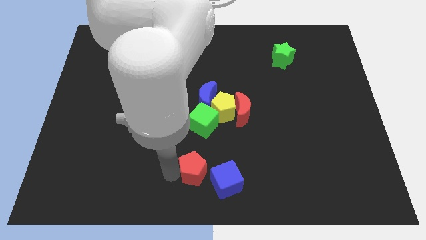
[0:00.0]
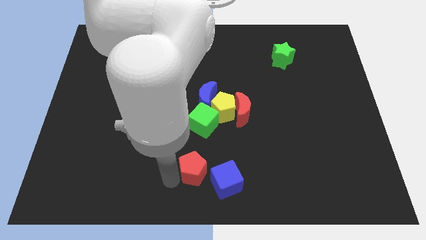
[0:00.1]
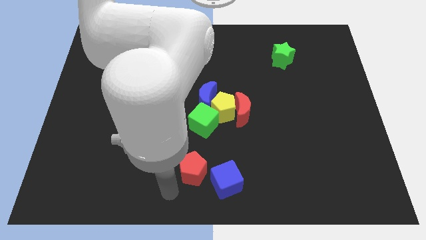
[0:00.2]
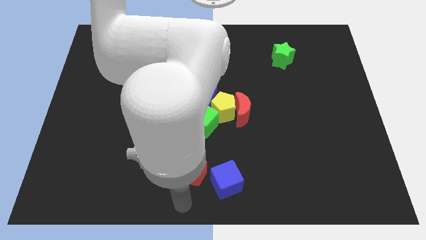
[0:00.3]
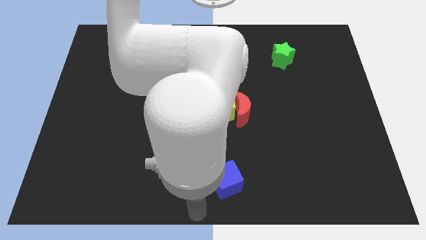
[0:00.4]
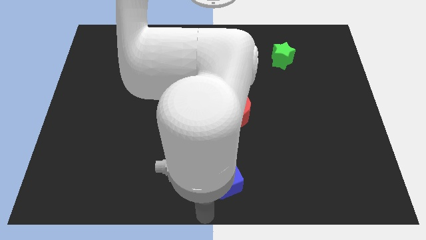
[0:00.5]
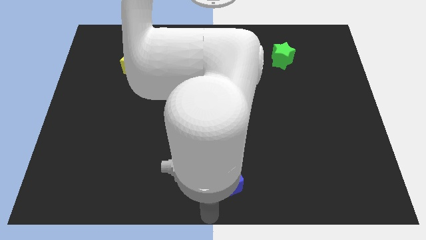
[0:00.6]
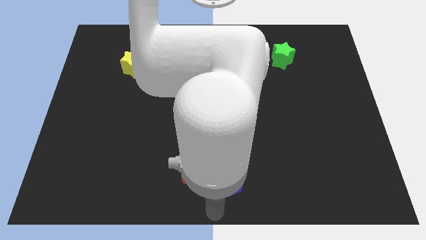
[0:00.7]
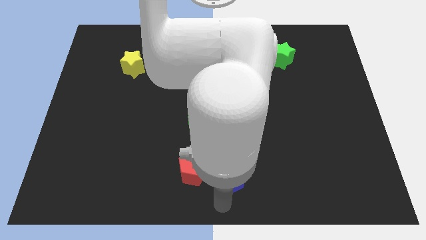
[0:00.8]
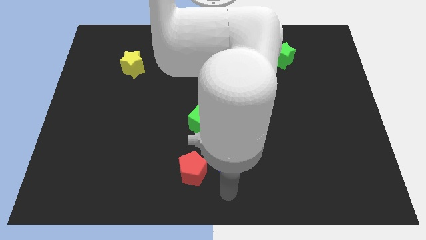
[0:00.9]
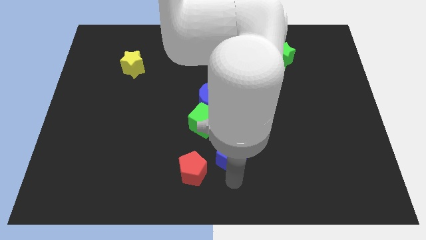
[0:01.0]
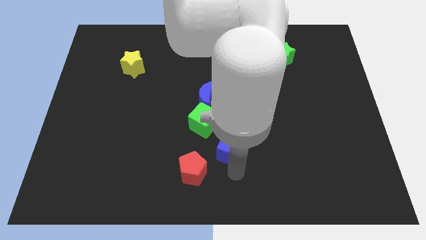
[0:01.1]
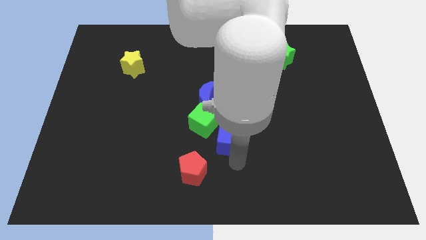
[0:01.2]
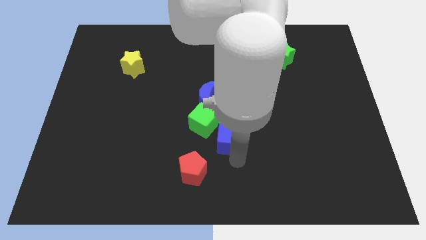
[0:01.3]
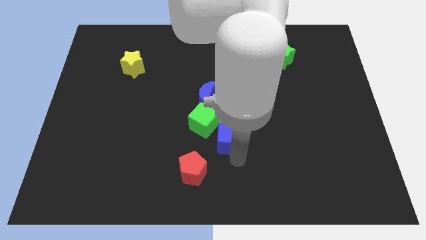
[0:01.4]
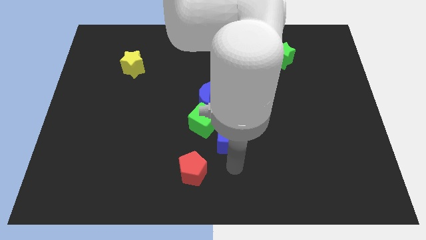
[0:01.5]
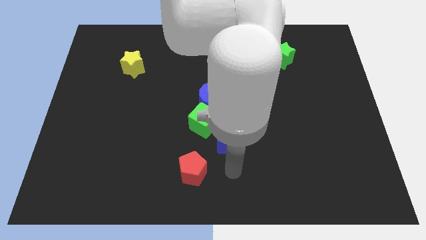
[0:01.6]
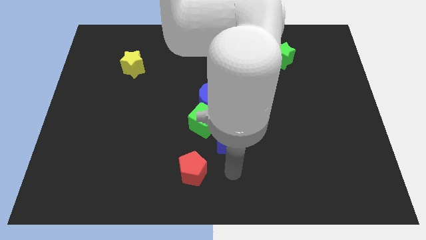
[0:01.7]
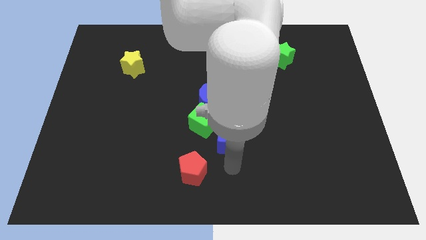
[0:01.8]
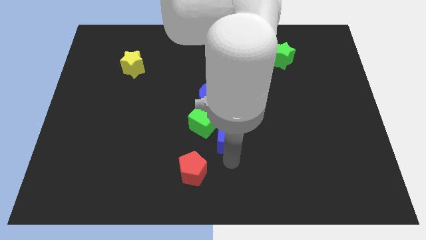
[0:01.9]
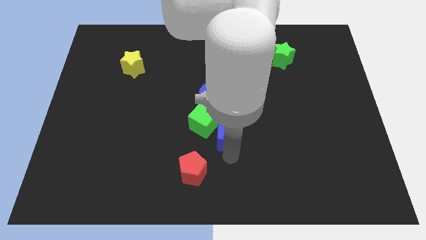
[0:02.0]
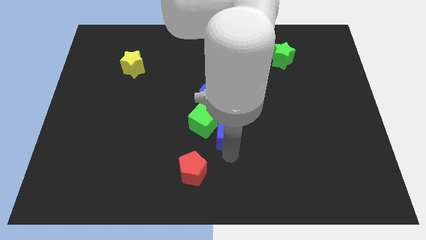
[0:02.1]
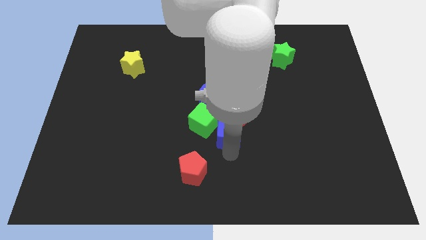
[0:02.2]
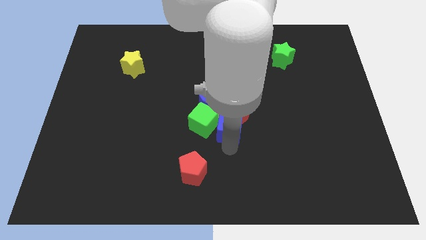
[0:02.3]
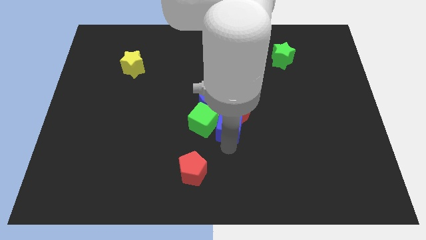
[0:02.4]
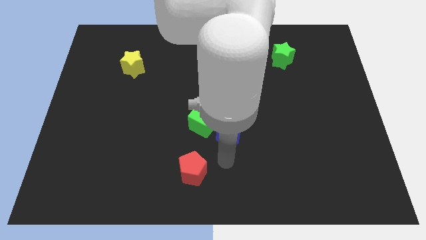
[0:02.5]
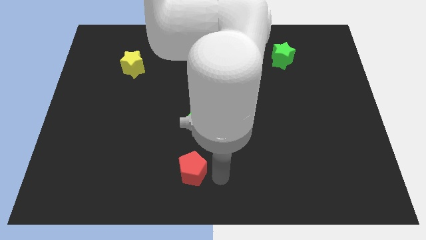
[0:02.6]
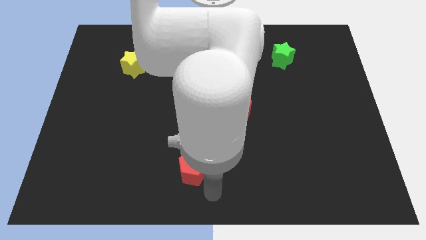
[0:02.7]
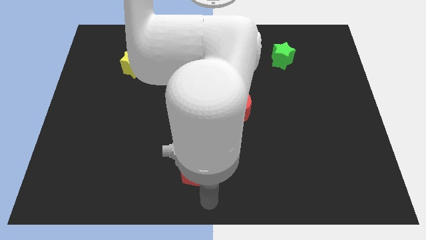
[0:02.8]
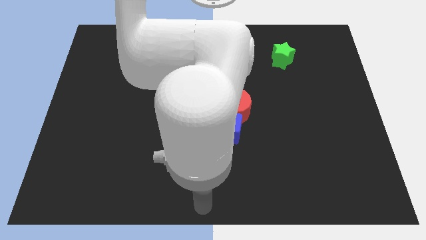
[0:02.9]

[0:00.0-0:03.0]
place the blue cube right to the green cube

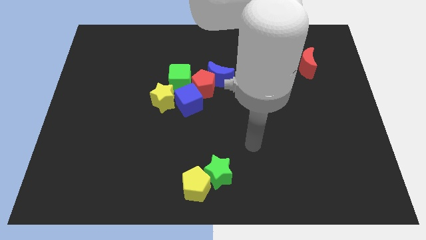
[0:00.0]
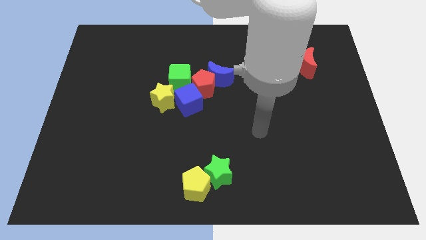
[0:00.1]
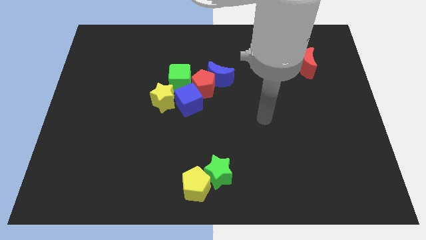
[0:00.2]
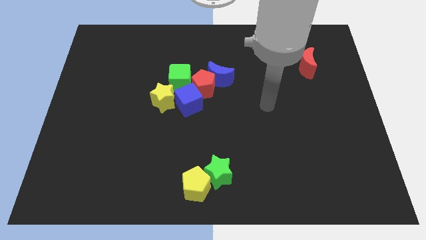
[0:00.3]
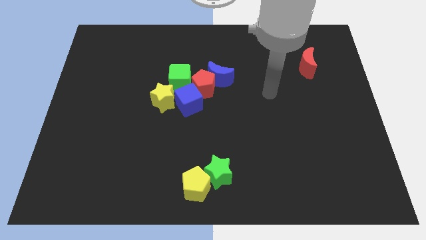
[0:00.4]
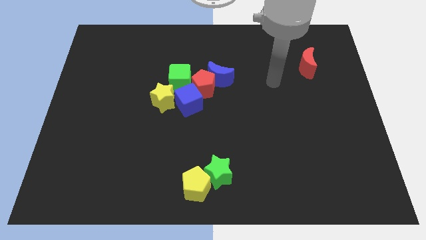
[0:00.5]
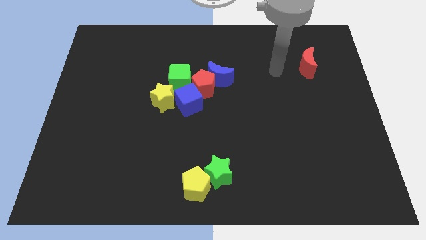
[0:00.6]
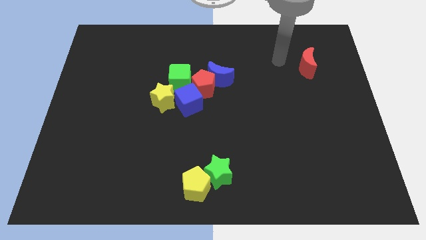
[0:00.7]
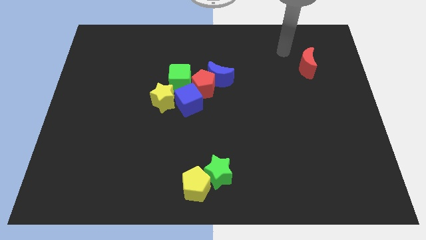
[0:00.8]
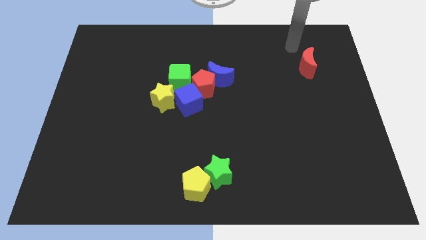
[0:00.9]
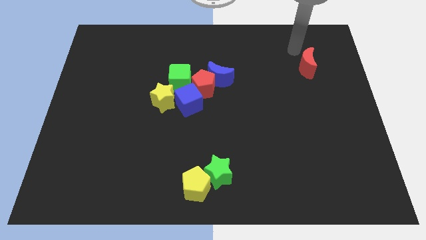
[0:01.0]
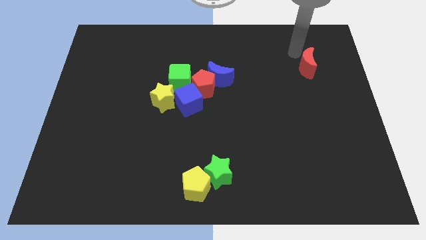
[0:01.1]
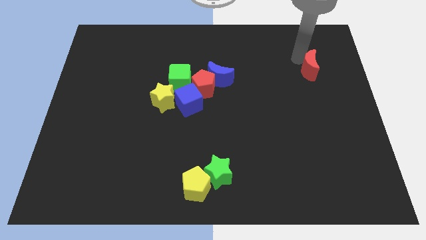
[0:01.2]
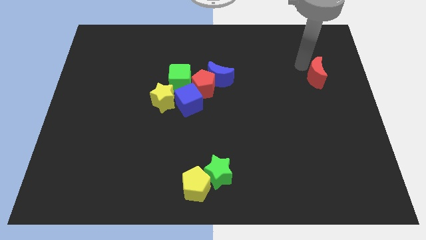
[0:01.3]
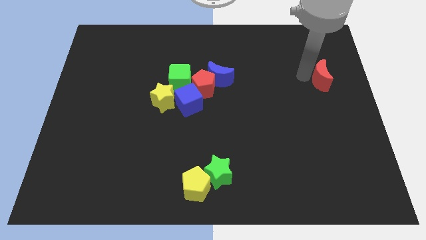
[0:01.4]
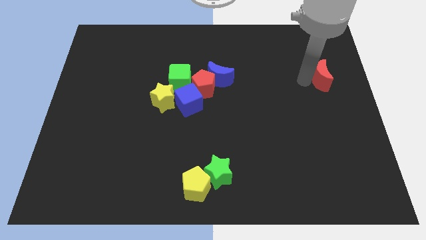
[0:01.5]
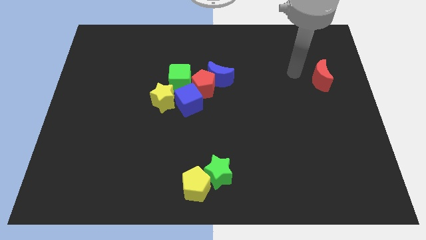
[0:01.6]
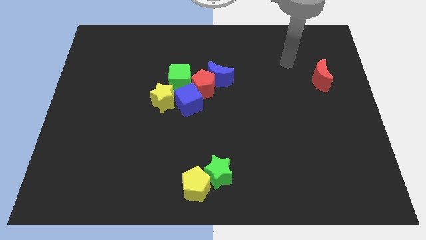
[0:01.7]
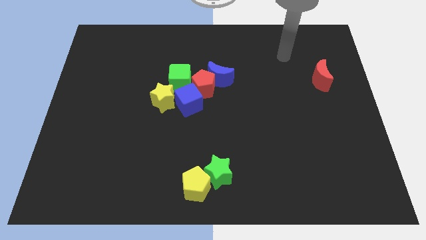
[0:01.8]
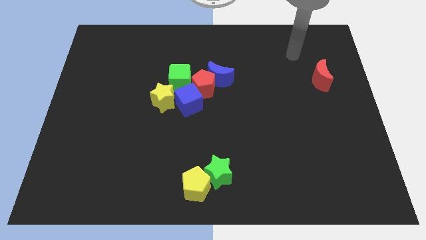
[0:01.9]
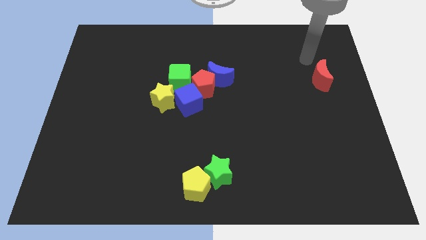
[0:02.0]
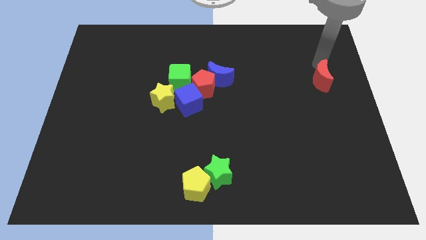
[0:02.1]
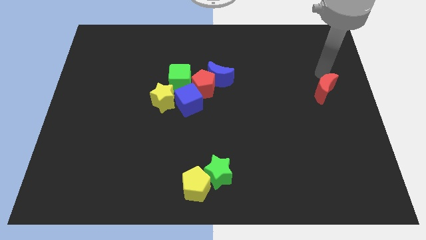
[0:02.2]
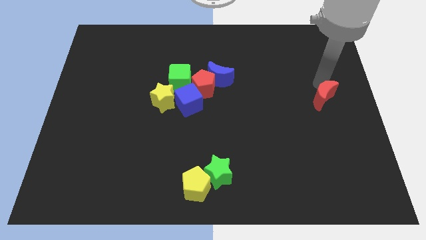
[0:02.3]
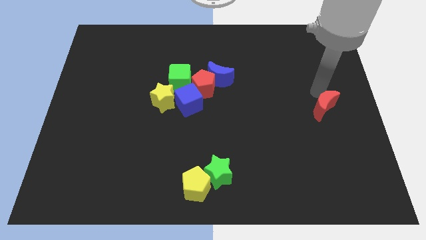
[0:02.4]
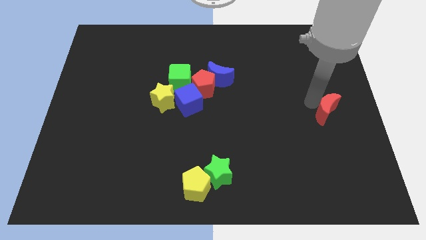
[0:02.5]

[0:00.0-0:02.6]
move red crescent vertically down

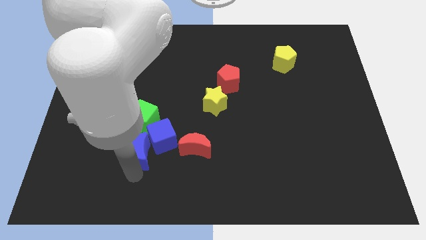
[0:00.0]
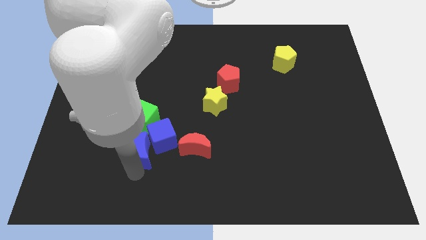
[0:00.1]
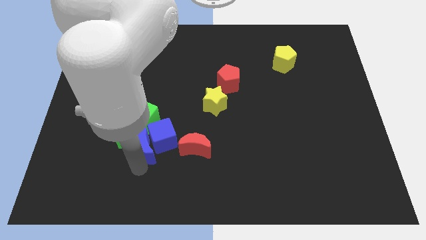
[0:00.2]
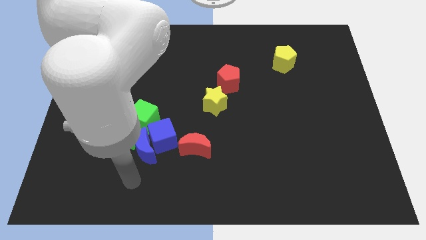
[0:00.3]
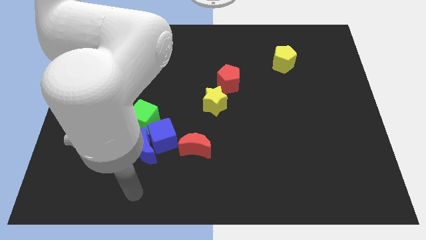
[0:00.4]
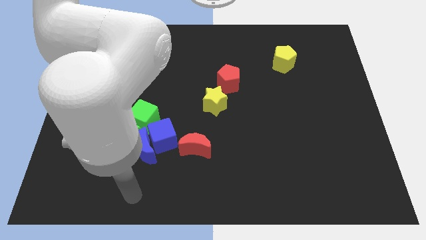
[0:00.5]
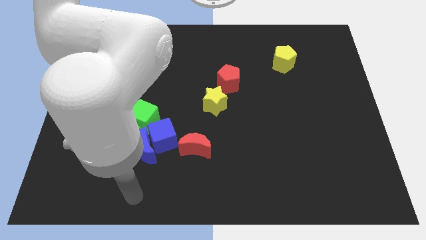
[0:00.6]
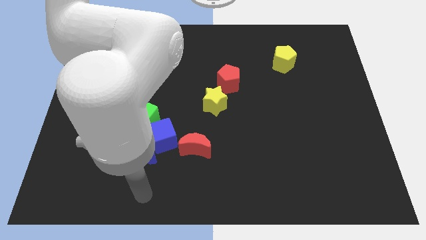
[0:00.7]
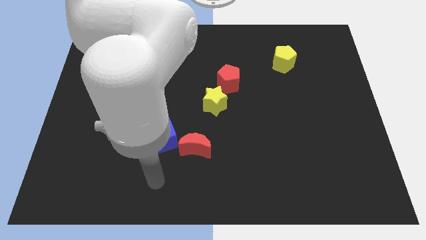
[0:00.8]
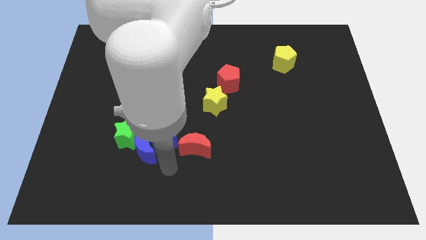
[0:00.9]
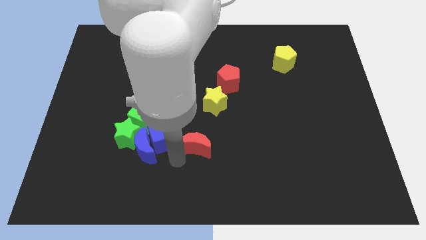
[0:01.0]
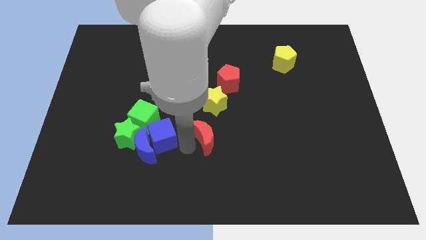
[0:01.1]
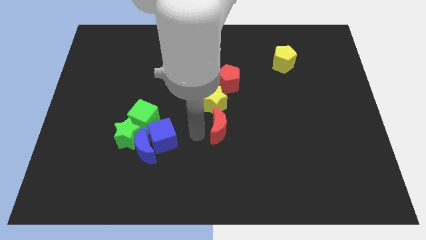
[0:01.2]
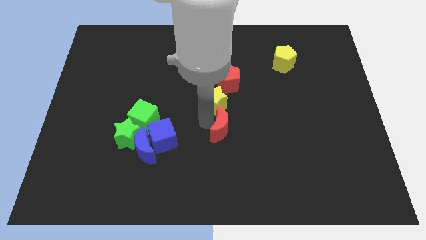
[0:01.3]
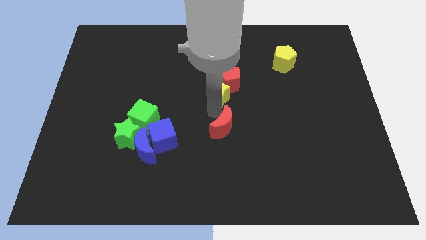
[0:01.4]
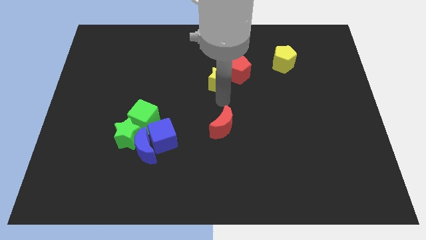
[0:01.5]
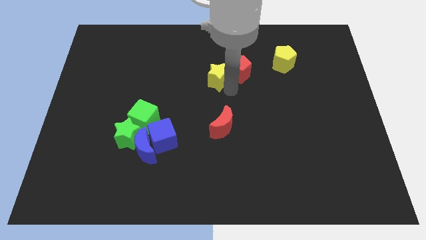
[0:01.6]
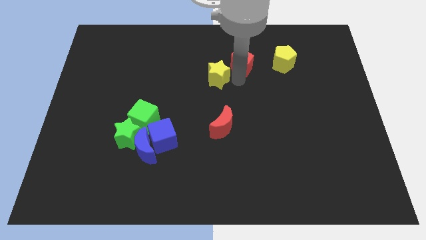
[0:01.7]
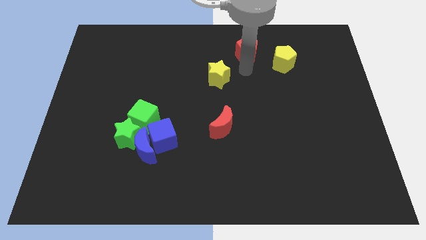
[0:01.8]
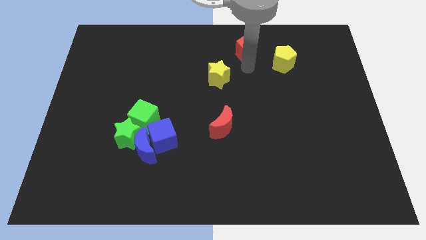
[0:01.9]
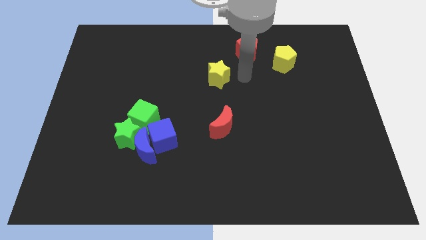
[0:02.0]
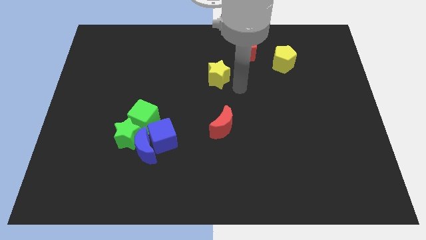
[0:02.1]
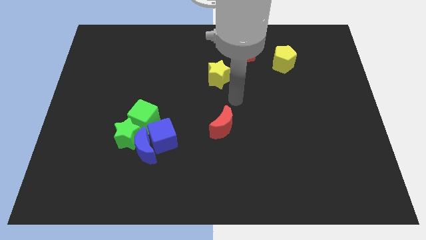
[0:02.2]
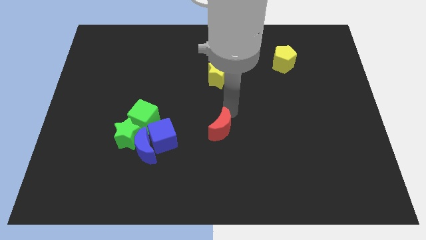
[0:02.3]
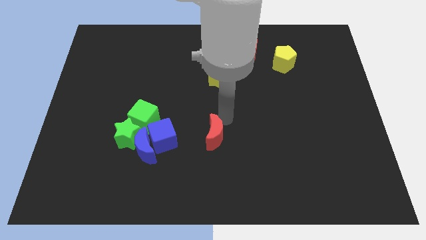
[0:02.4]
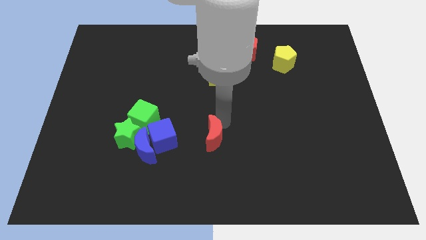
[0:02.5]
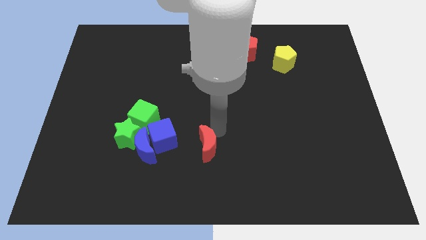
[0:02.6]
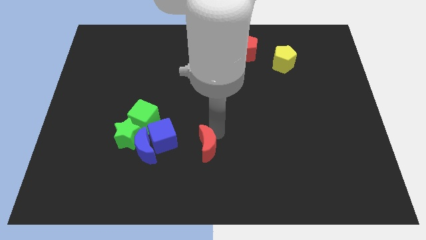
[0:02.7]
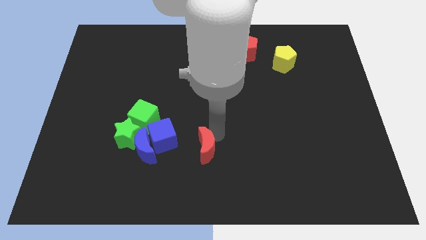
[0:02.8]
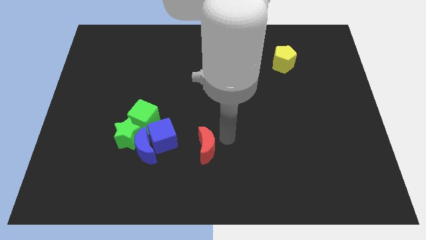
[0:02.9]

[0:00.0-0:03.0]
move red crescent to the right of blue cube

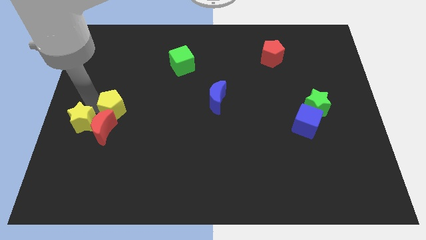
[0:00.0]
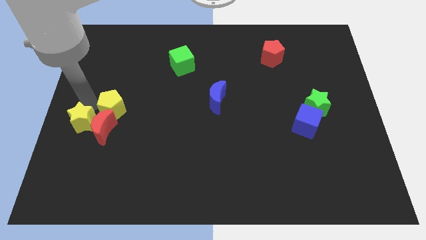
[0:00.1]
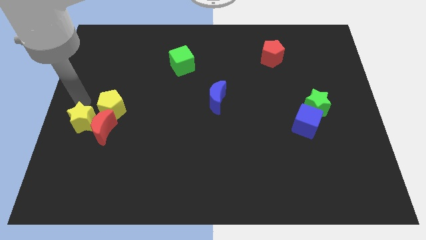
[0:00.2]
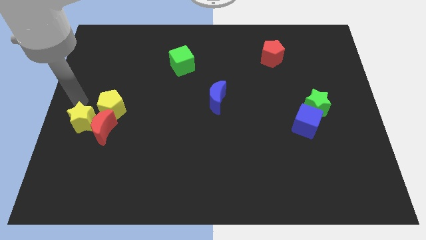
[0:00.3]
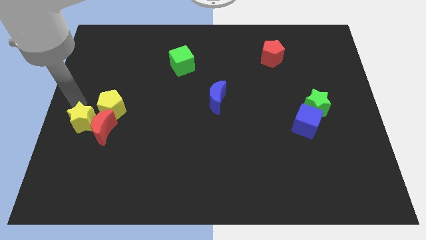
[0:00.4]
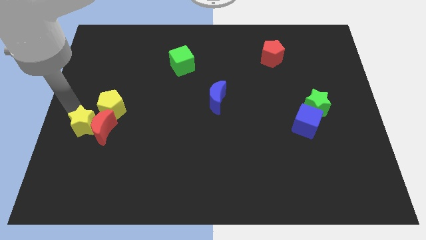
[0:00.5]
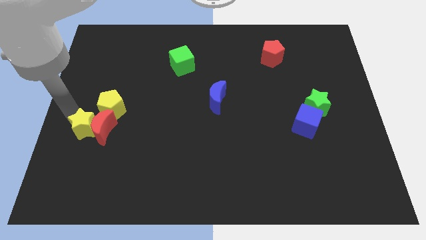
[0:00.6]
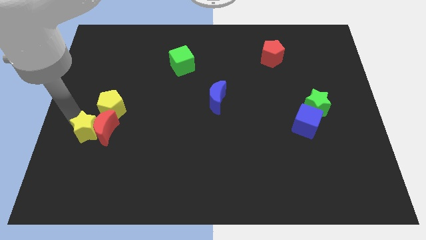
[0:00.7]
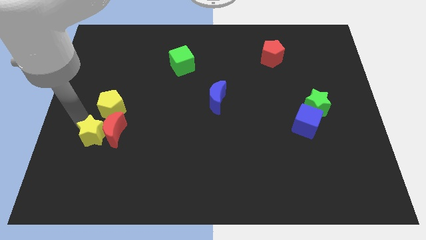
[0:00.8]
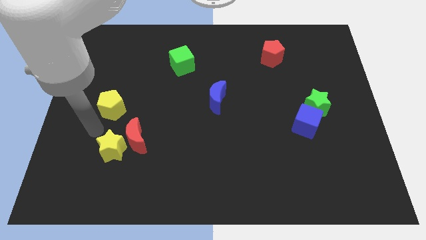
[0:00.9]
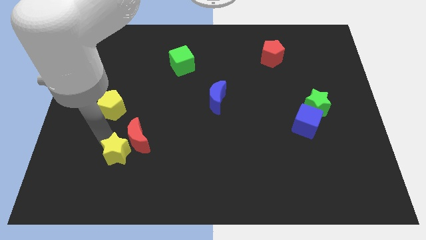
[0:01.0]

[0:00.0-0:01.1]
separate the yellow star with yellow pentagon and red crescent
